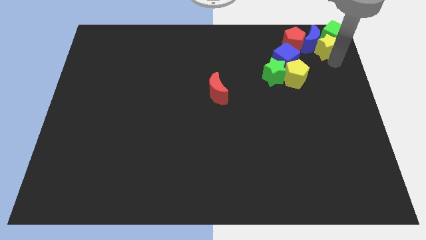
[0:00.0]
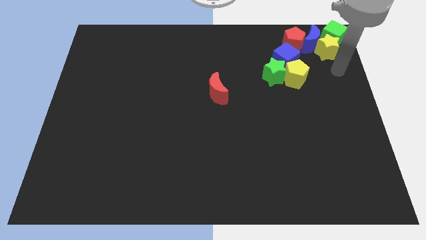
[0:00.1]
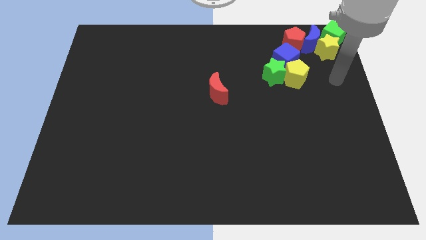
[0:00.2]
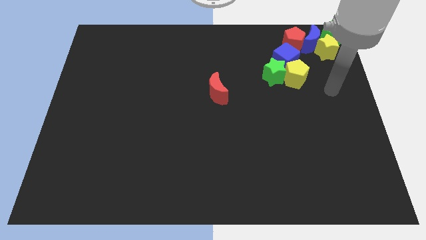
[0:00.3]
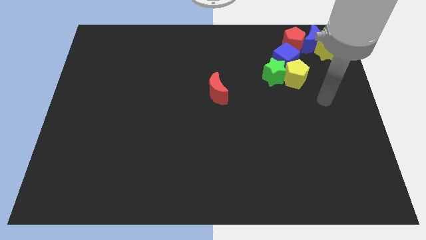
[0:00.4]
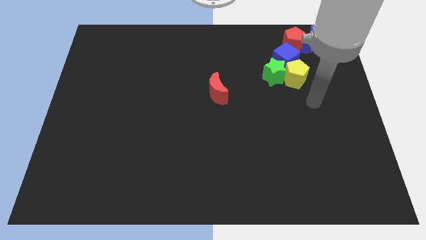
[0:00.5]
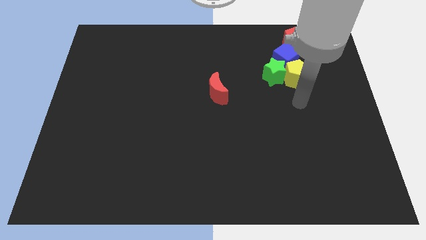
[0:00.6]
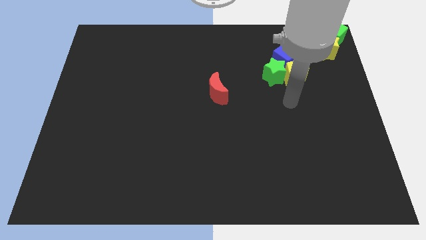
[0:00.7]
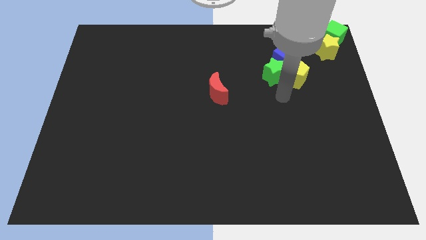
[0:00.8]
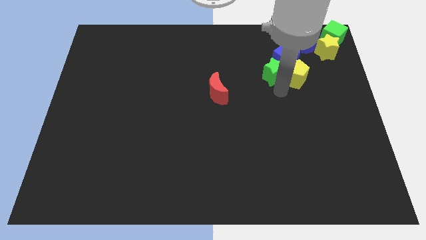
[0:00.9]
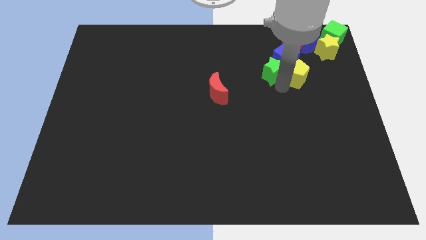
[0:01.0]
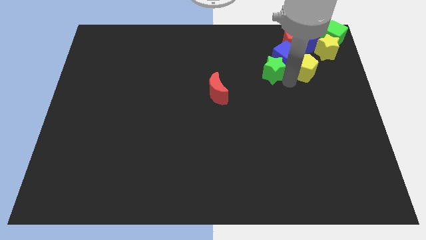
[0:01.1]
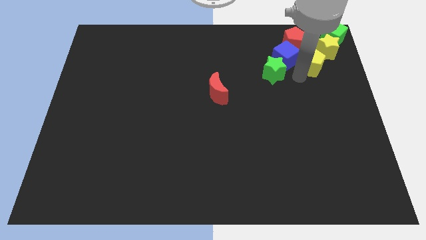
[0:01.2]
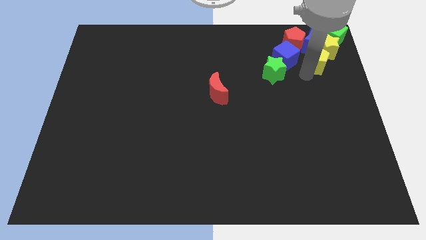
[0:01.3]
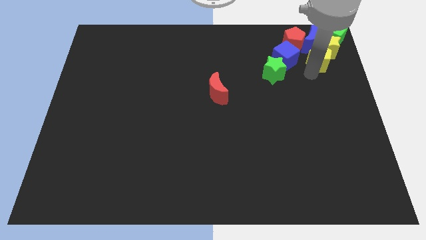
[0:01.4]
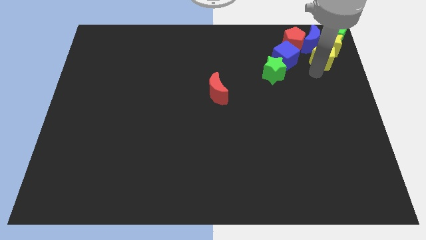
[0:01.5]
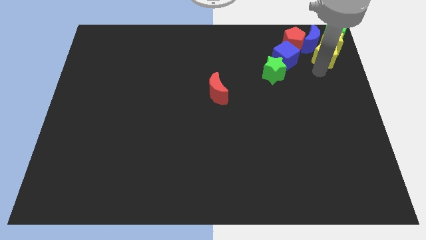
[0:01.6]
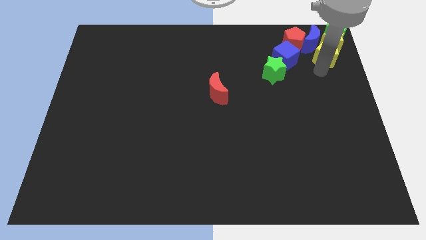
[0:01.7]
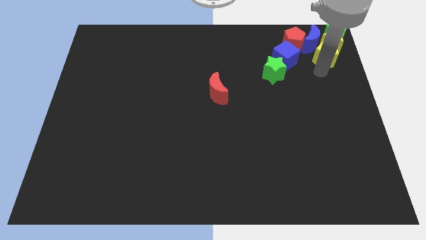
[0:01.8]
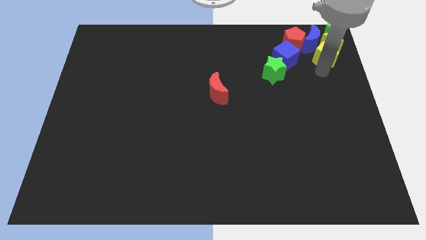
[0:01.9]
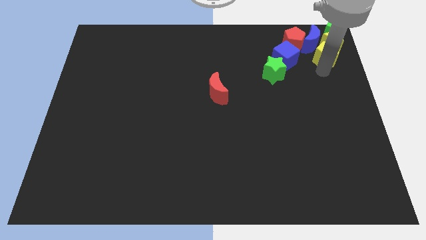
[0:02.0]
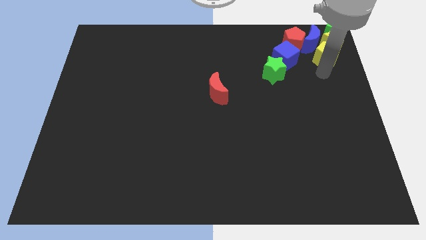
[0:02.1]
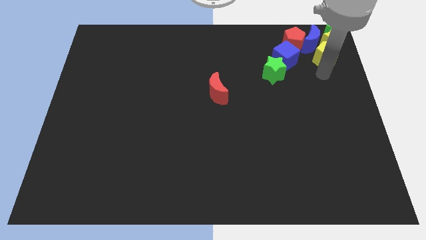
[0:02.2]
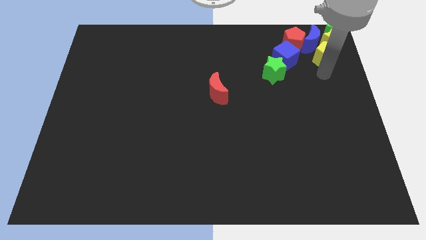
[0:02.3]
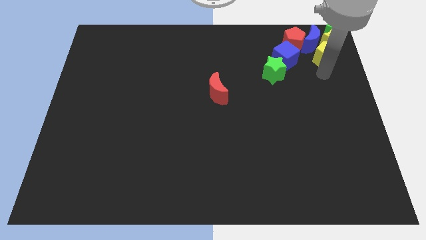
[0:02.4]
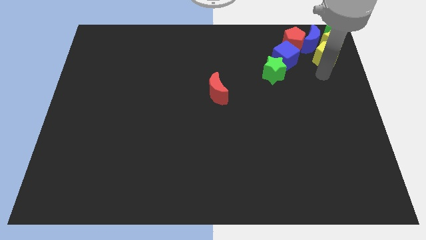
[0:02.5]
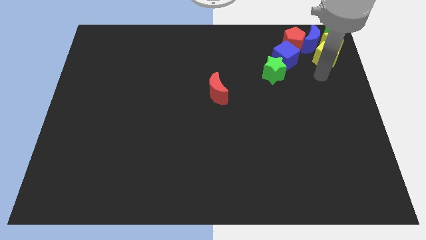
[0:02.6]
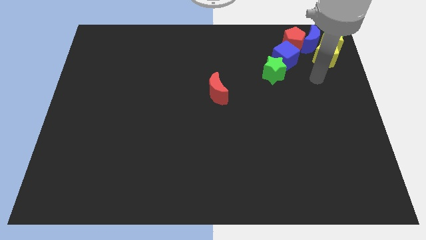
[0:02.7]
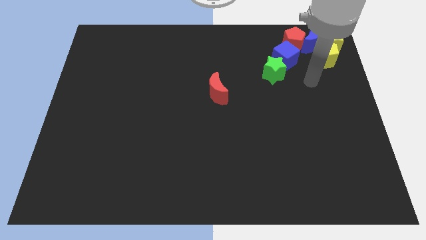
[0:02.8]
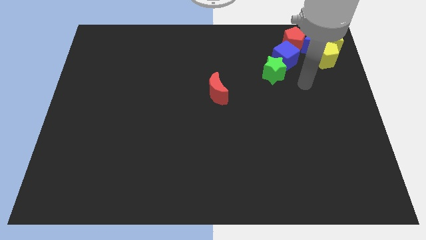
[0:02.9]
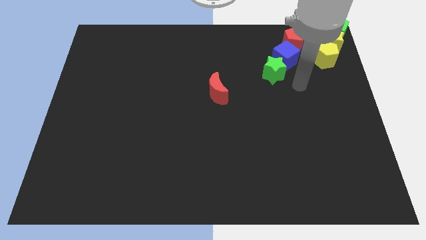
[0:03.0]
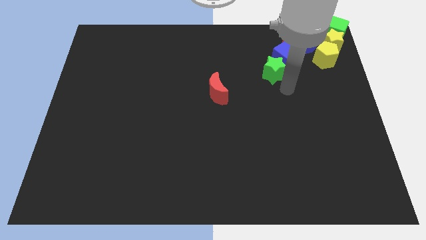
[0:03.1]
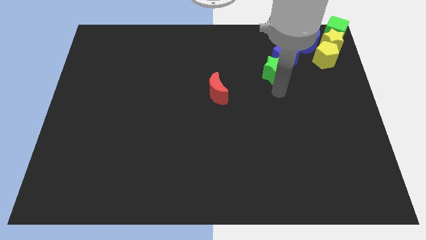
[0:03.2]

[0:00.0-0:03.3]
push the yellow pentagon into the yellow star

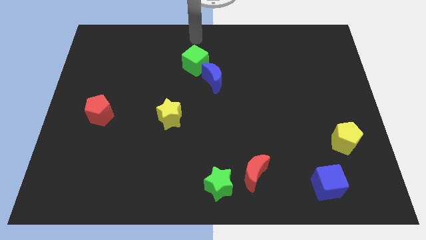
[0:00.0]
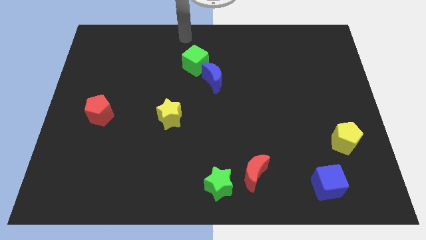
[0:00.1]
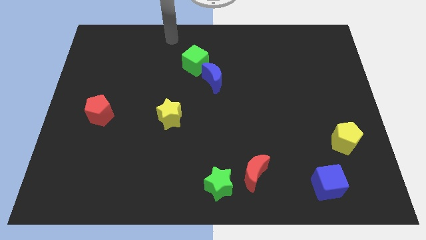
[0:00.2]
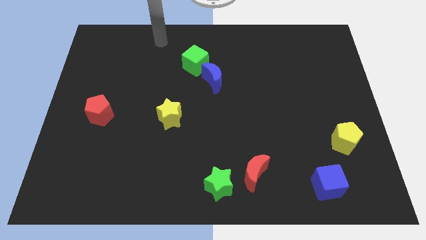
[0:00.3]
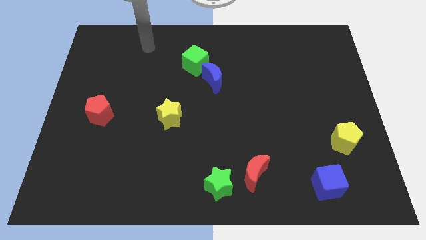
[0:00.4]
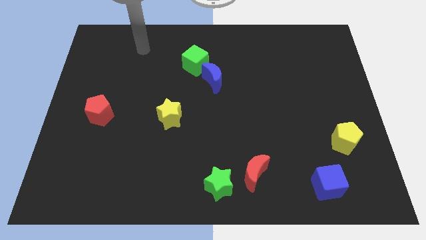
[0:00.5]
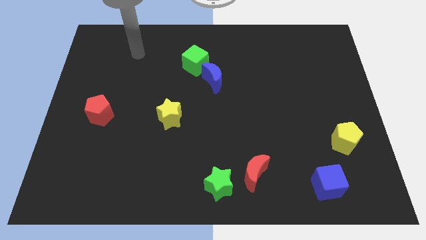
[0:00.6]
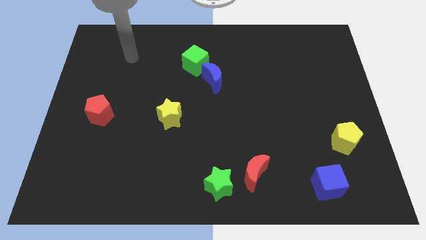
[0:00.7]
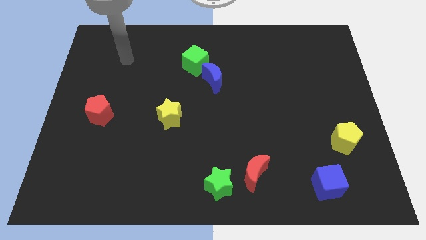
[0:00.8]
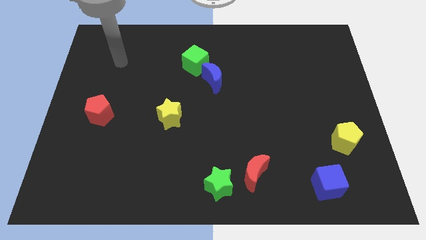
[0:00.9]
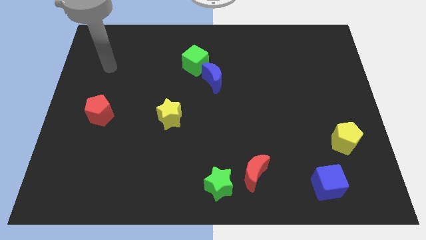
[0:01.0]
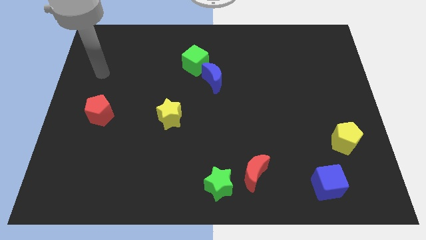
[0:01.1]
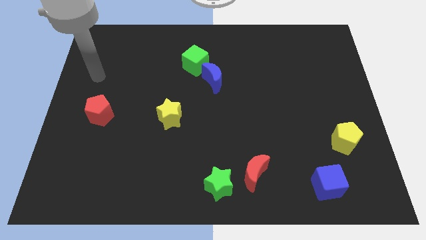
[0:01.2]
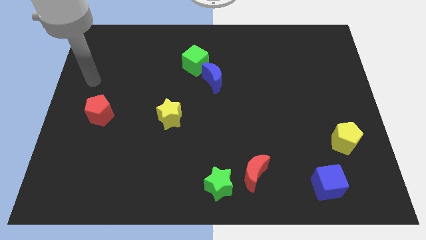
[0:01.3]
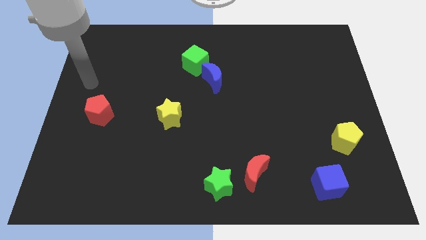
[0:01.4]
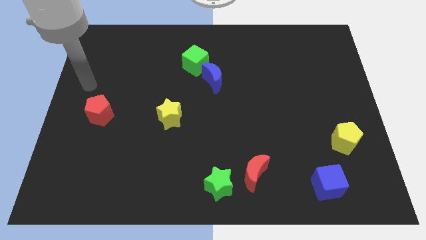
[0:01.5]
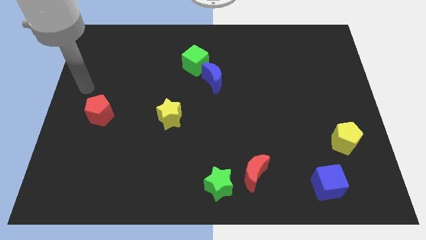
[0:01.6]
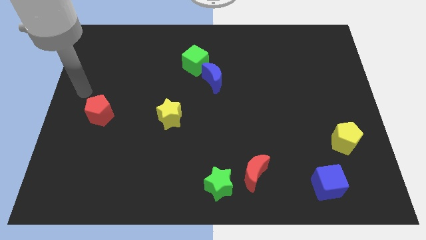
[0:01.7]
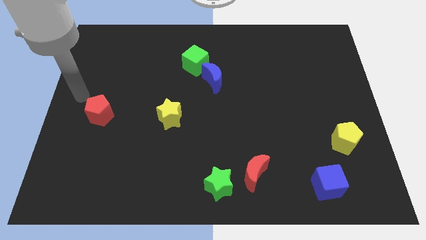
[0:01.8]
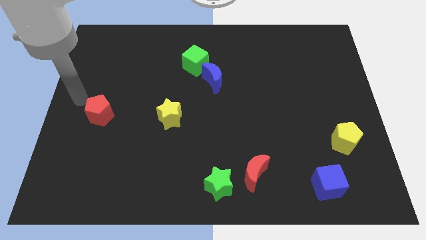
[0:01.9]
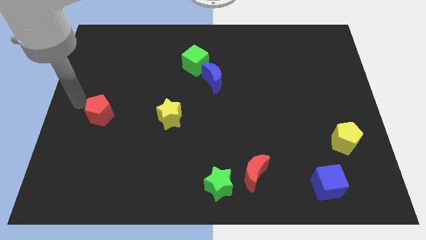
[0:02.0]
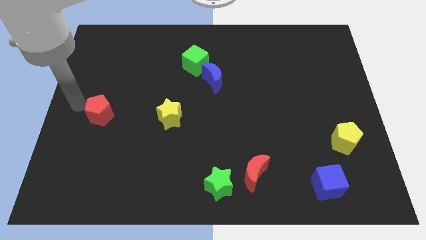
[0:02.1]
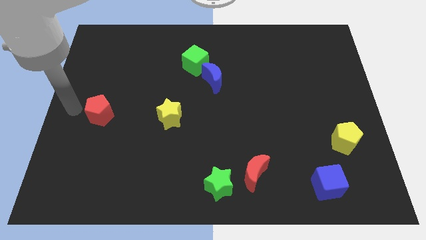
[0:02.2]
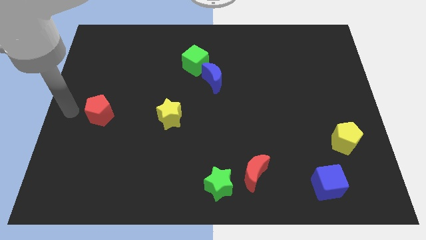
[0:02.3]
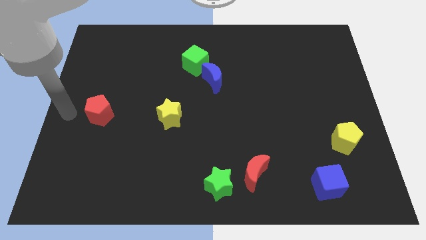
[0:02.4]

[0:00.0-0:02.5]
place the arm left to the red pentagon

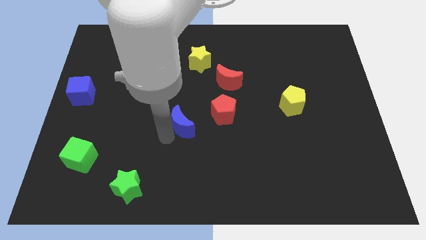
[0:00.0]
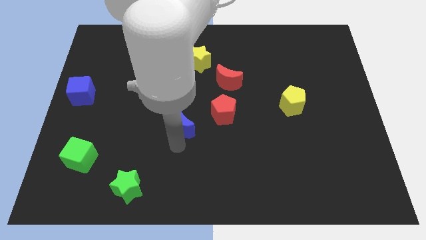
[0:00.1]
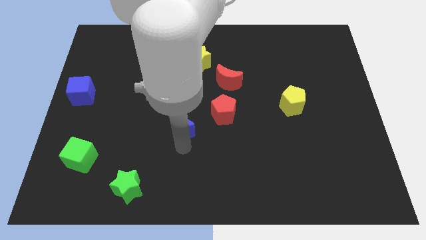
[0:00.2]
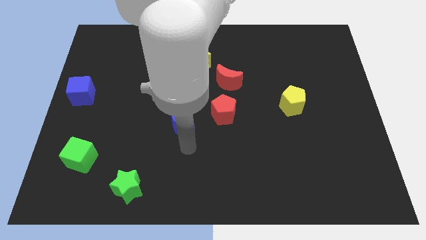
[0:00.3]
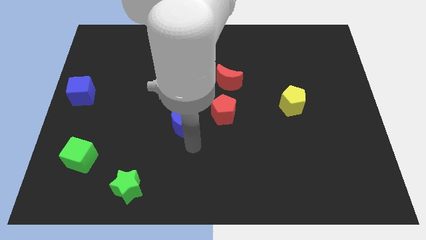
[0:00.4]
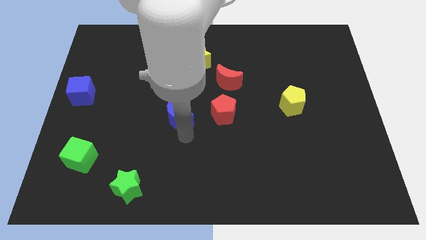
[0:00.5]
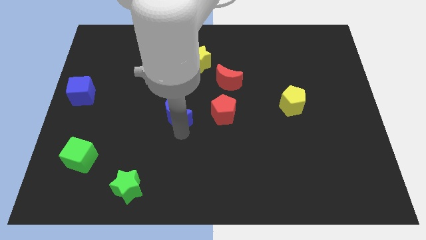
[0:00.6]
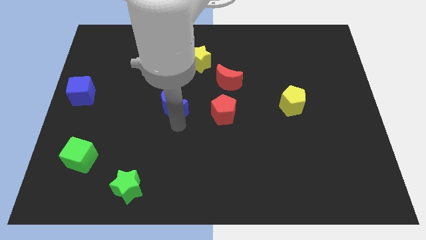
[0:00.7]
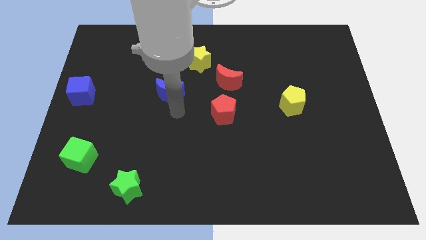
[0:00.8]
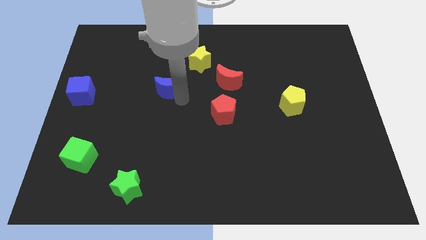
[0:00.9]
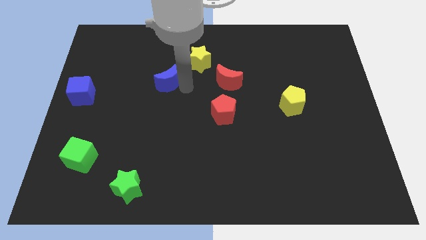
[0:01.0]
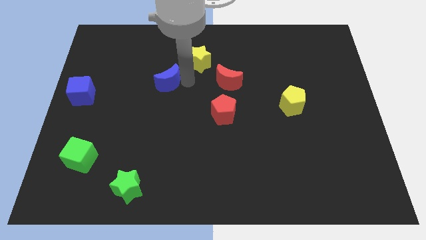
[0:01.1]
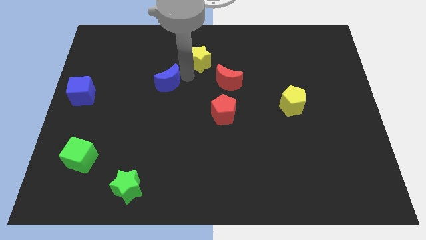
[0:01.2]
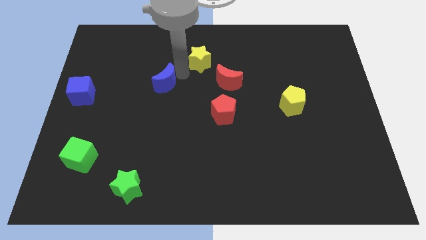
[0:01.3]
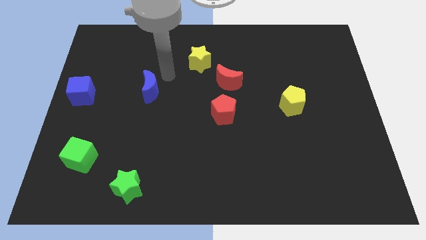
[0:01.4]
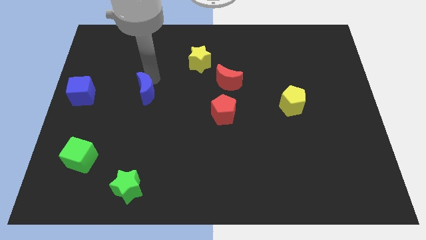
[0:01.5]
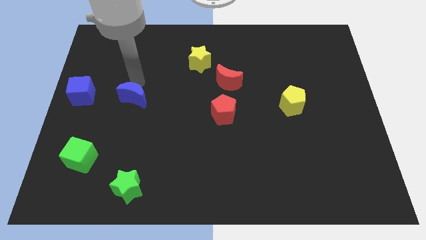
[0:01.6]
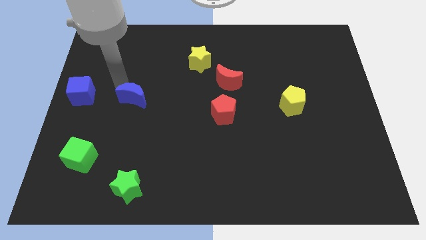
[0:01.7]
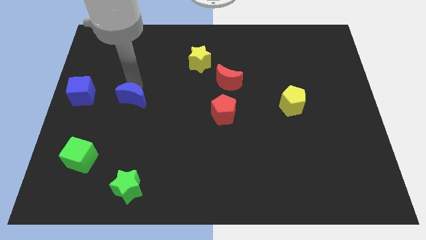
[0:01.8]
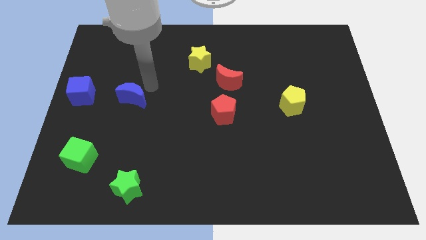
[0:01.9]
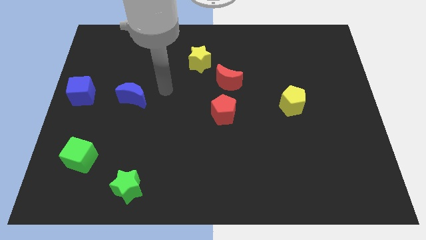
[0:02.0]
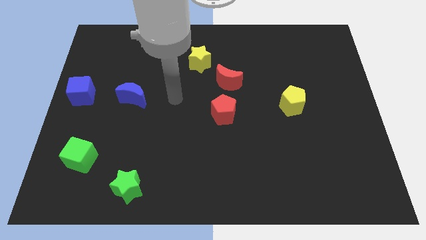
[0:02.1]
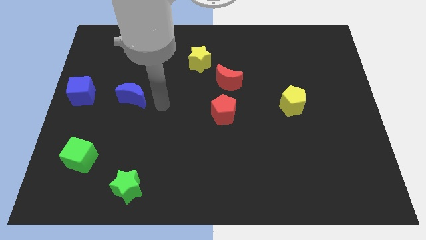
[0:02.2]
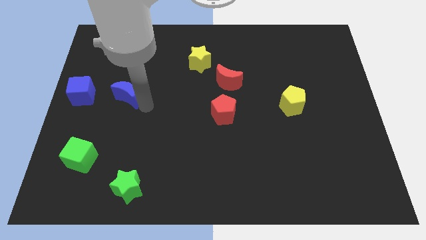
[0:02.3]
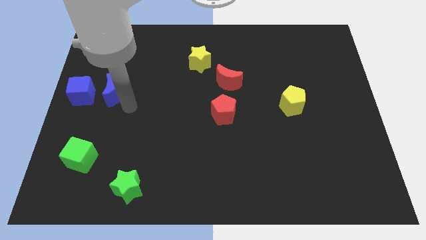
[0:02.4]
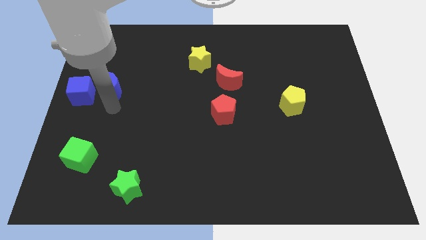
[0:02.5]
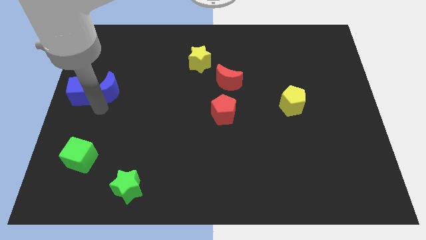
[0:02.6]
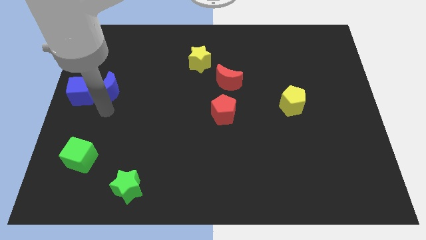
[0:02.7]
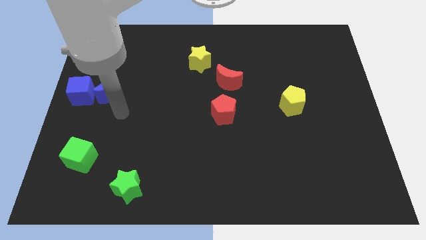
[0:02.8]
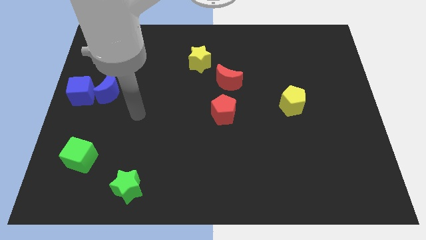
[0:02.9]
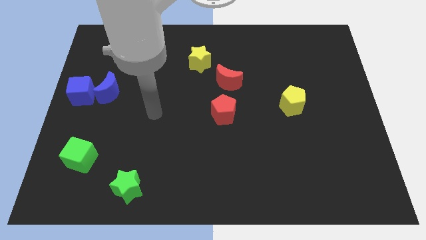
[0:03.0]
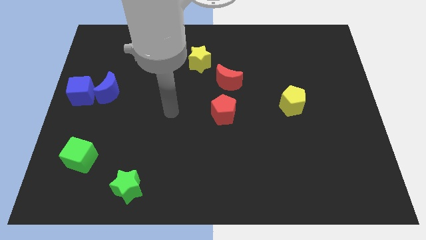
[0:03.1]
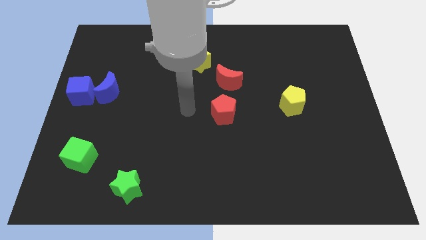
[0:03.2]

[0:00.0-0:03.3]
push the blue moon towards the blue cube

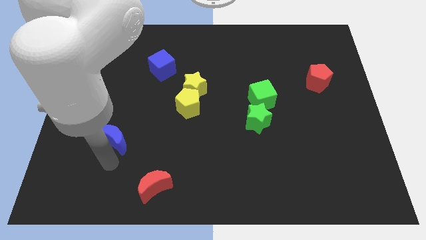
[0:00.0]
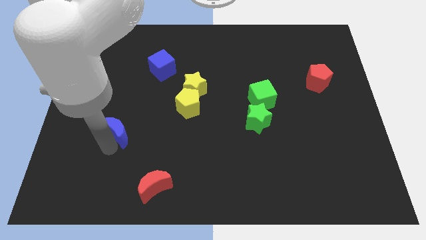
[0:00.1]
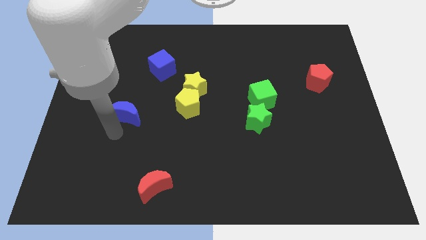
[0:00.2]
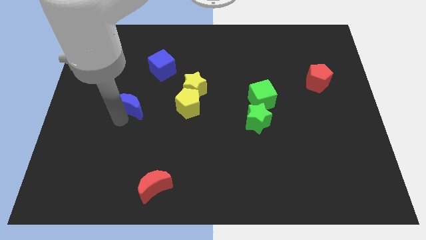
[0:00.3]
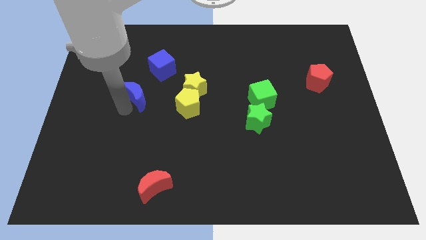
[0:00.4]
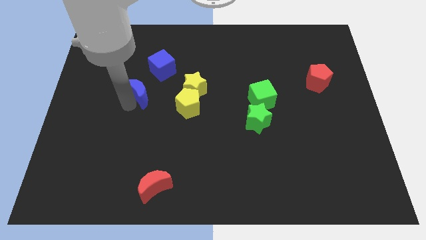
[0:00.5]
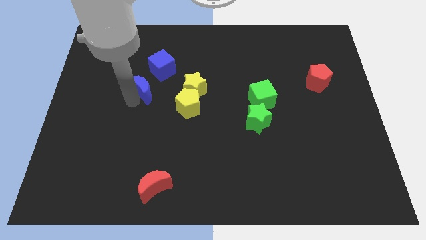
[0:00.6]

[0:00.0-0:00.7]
place the blue moon left to the yellow pentagon
